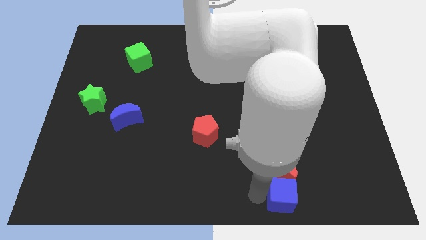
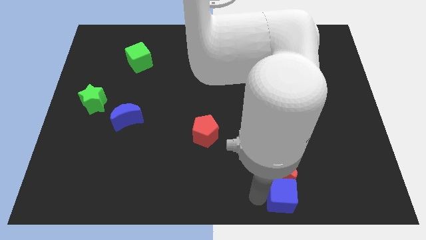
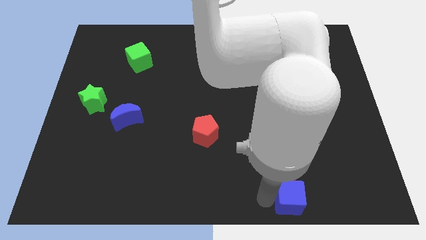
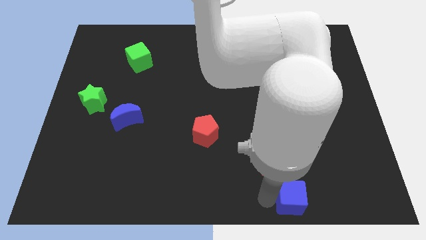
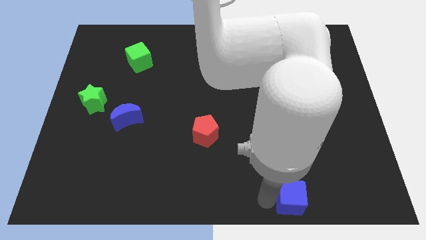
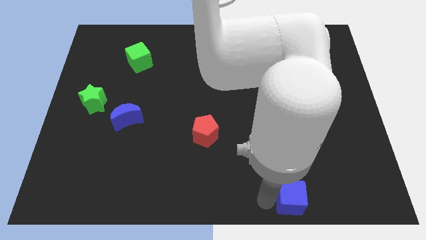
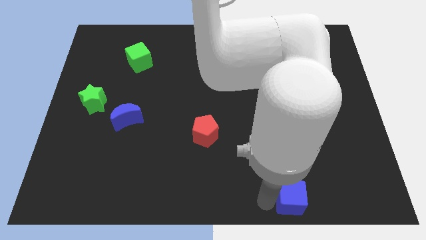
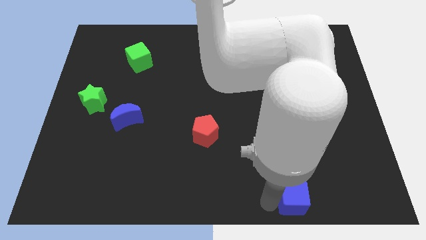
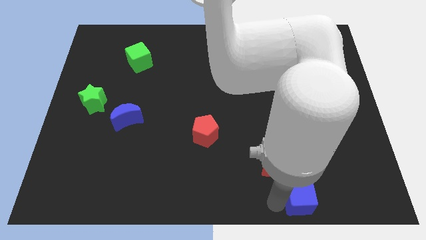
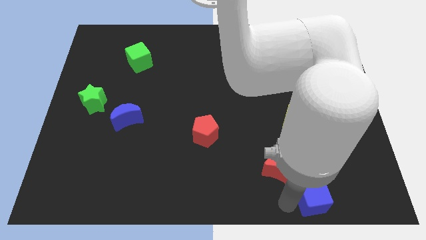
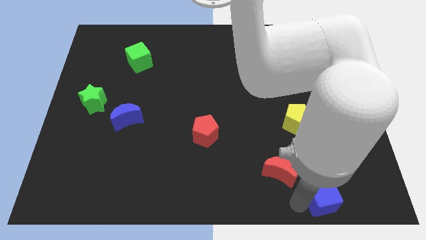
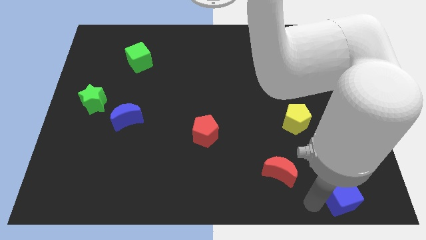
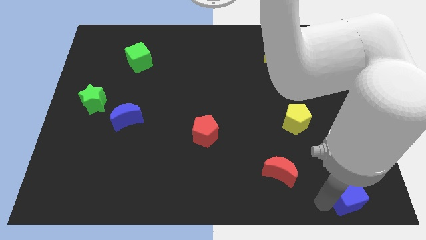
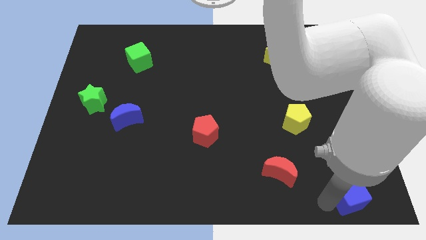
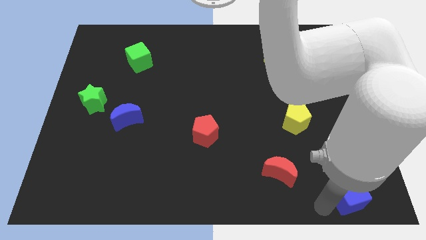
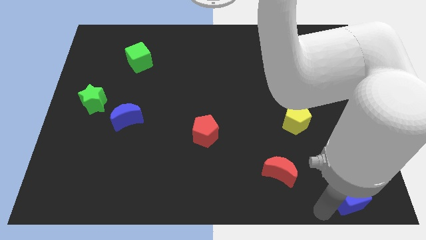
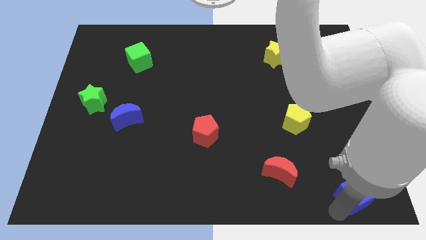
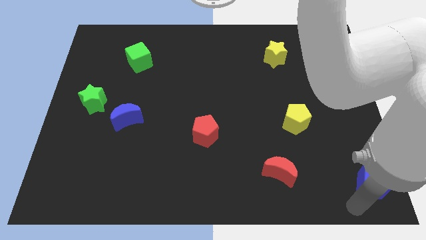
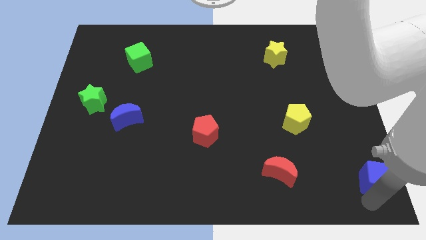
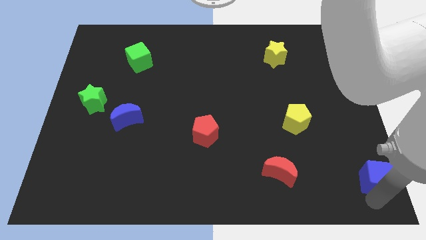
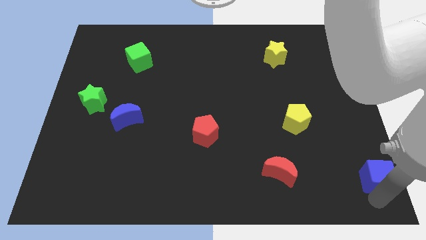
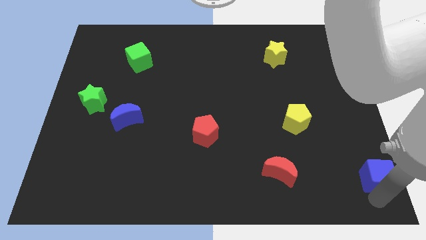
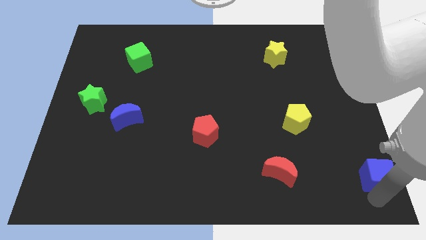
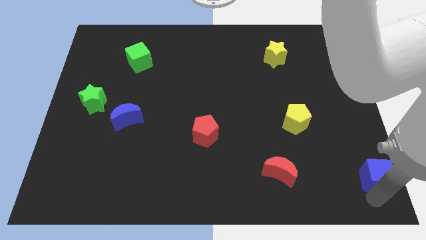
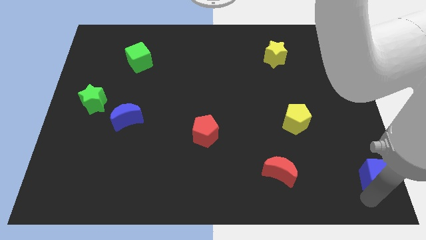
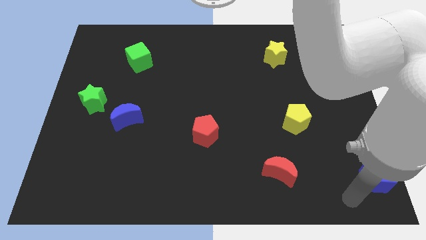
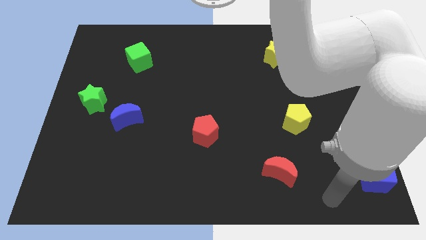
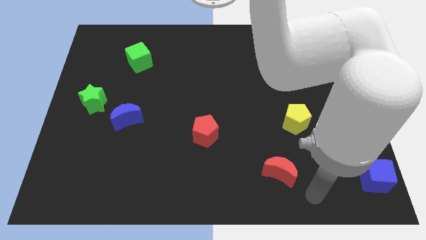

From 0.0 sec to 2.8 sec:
place the blue cube to the right of the red moon

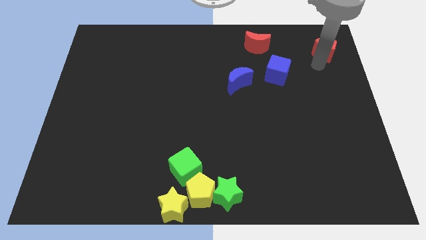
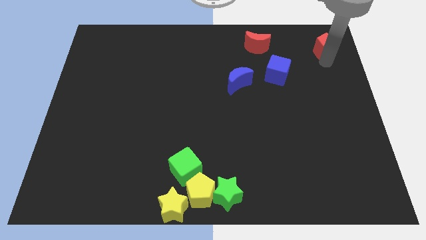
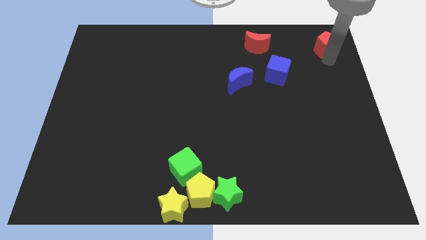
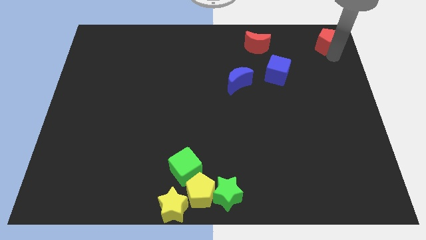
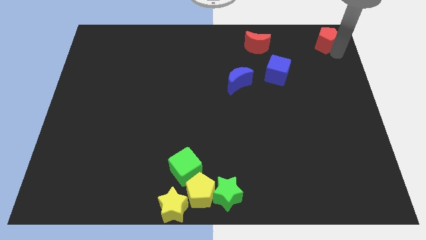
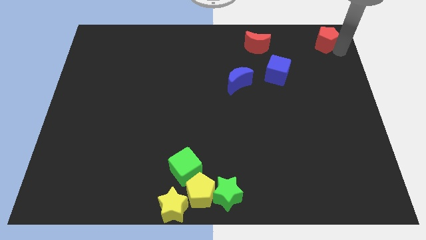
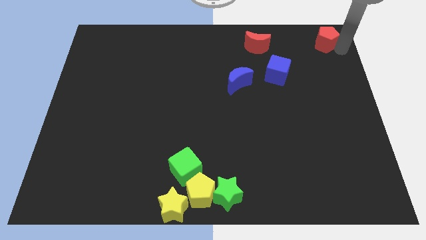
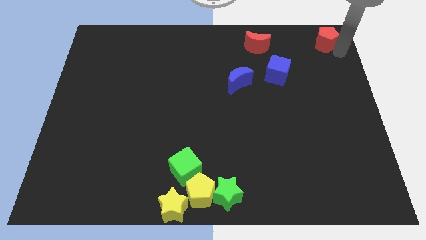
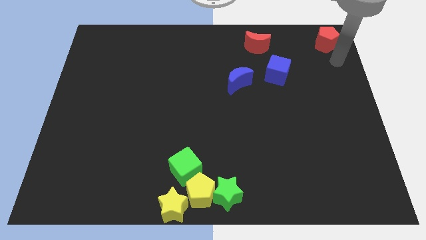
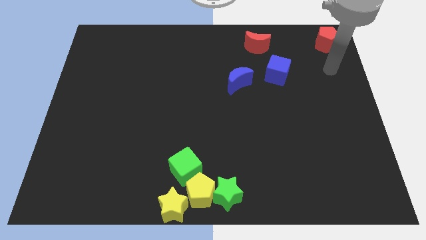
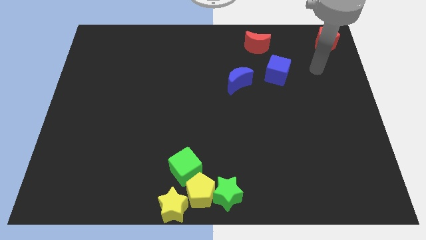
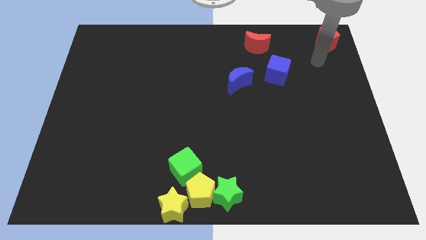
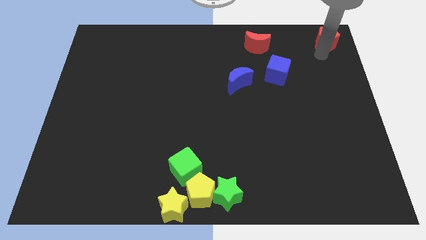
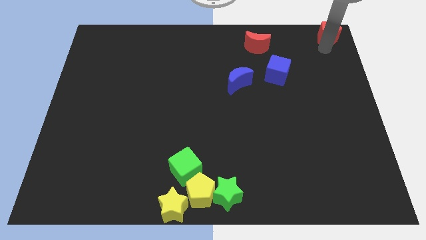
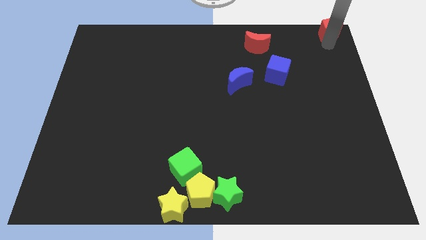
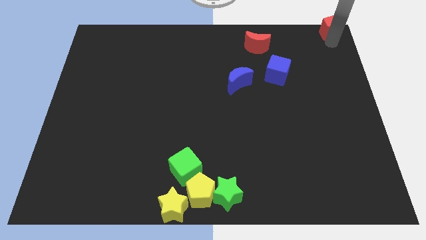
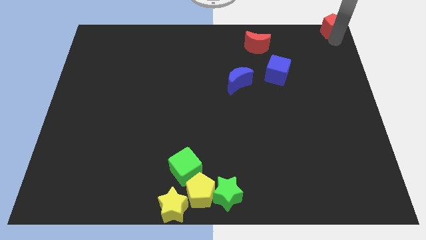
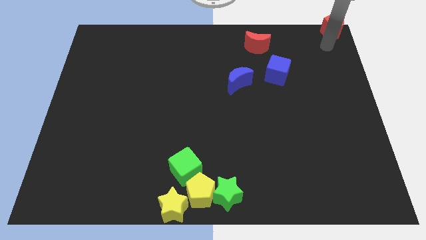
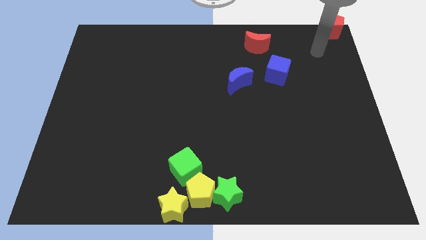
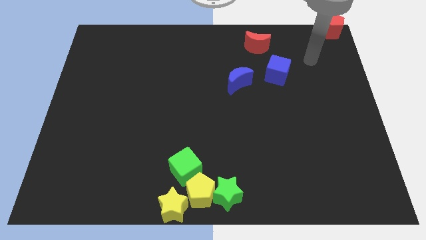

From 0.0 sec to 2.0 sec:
push red pentagon towards top right side of the board

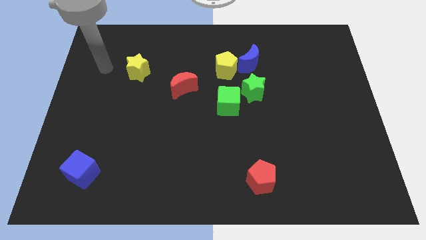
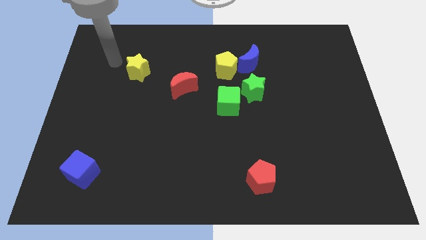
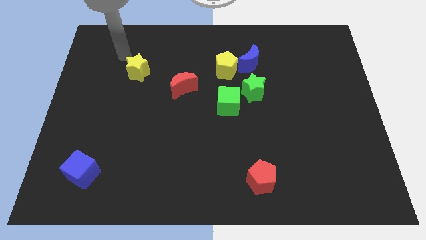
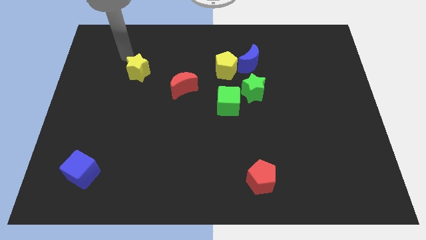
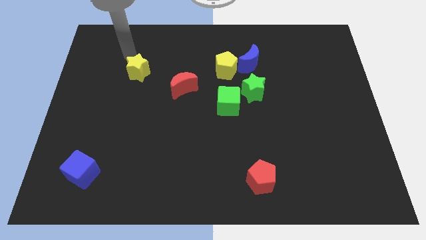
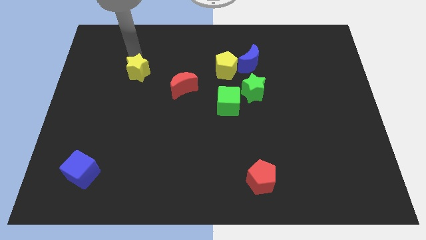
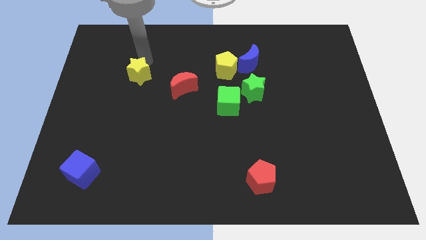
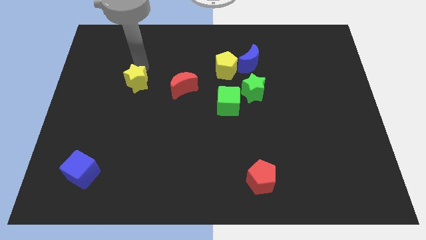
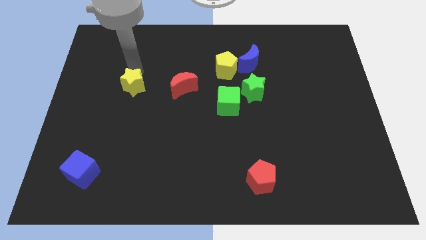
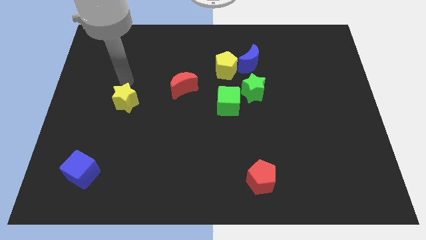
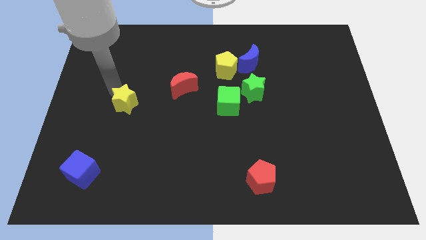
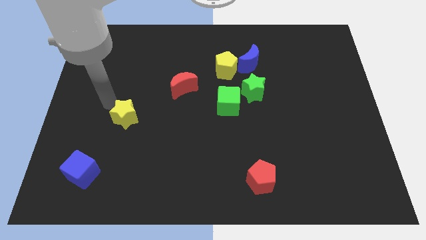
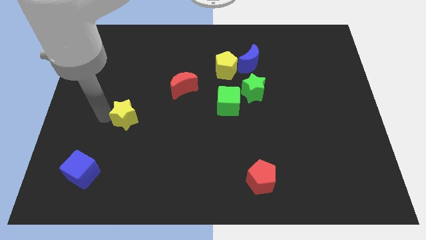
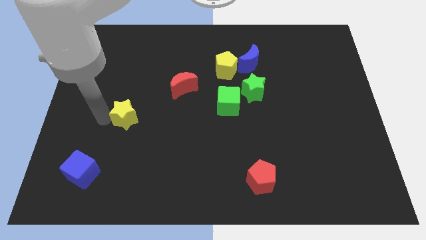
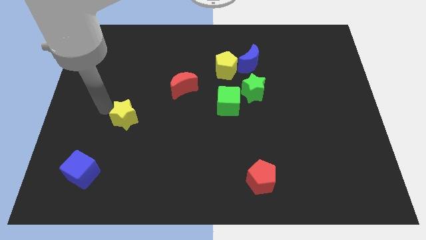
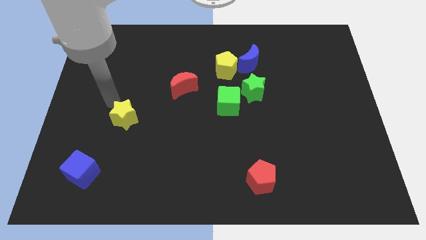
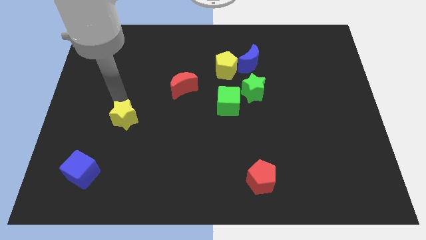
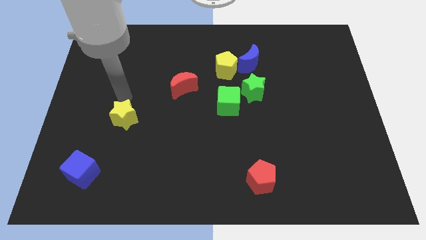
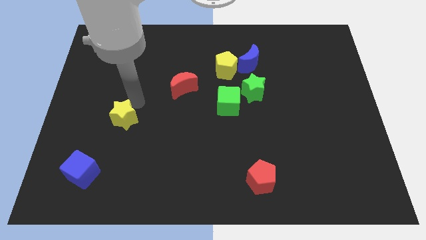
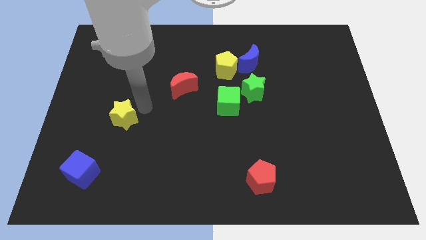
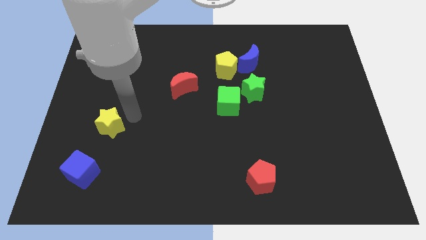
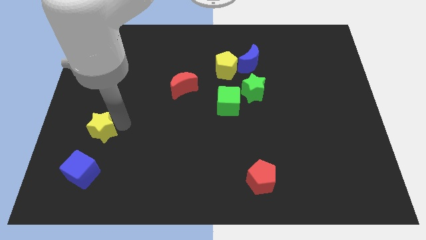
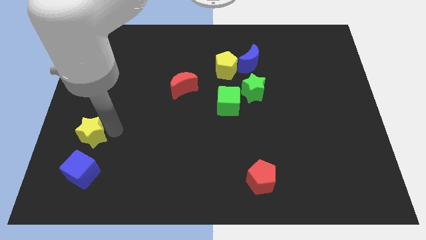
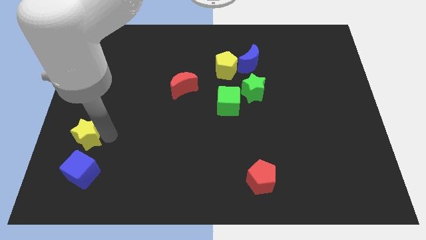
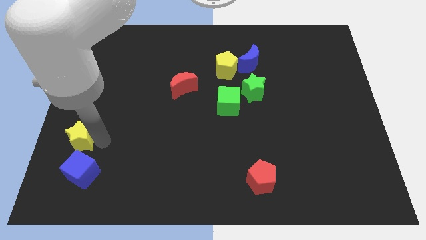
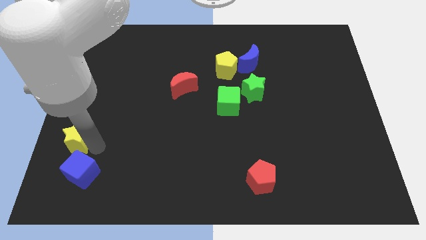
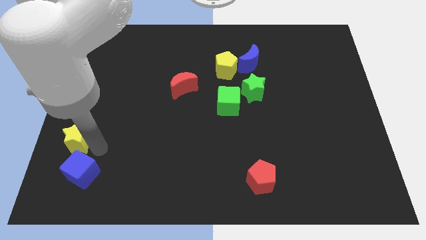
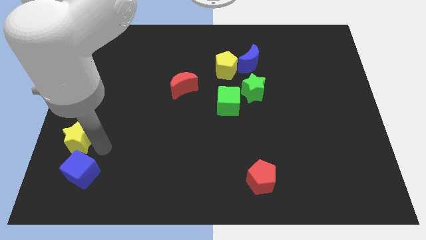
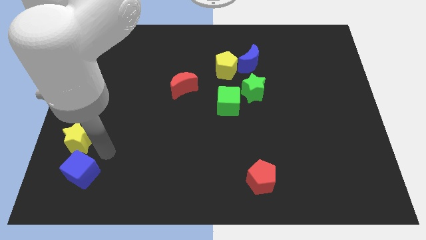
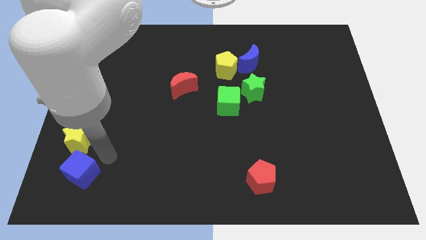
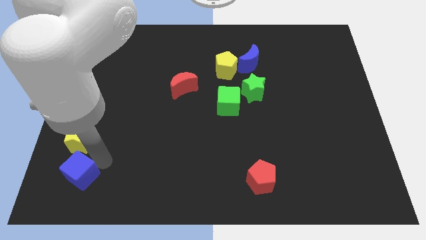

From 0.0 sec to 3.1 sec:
push the yellow star to the top side of the blue cube

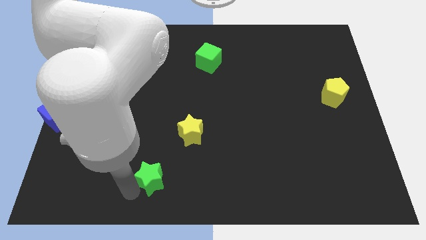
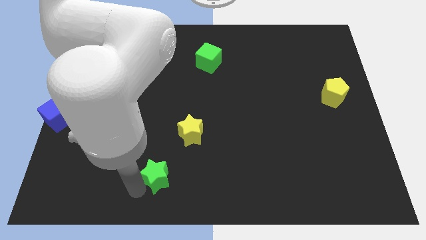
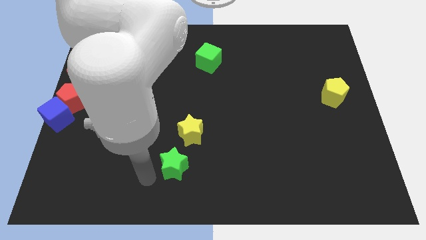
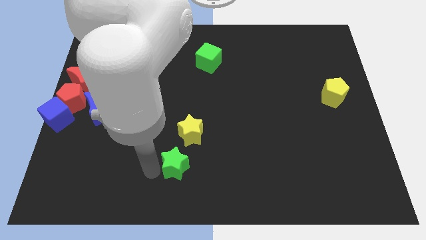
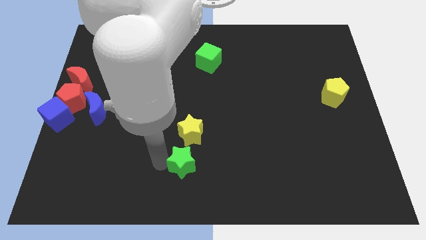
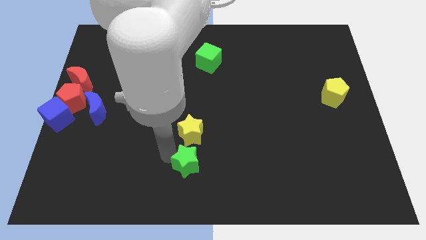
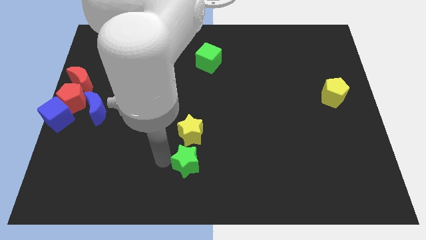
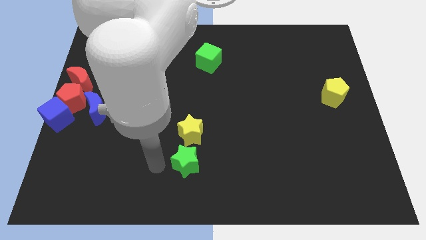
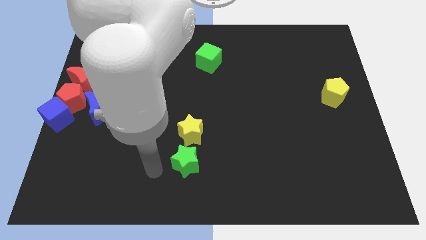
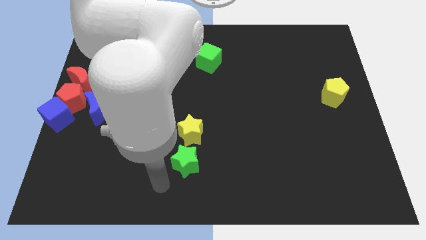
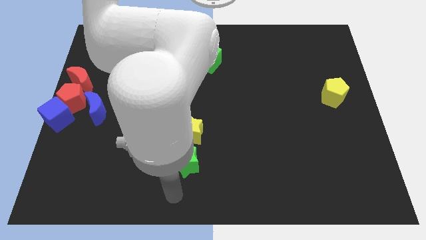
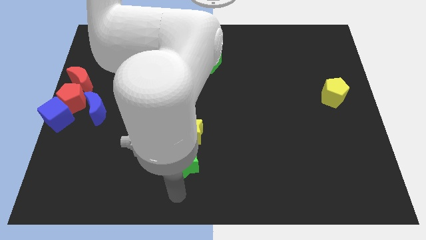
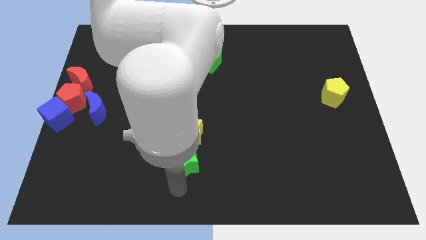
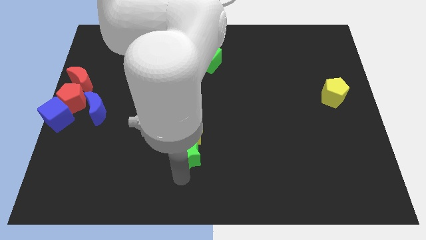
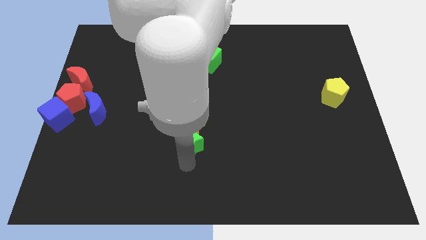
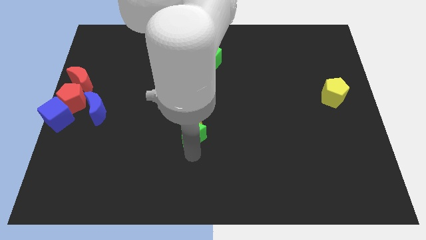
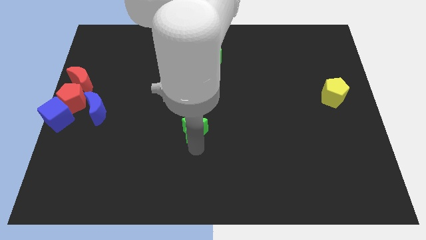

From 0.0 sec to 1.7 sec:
move the green star into the yellow star
